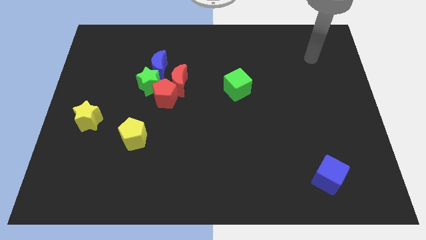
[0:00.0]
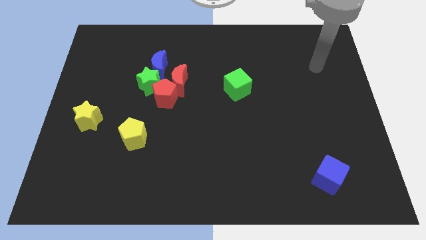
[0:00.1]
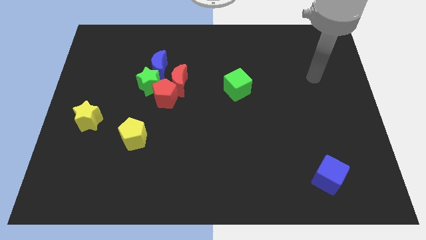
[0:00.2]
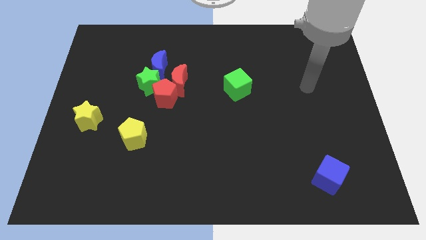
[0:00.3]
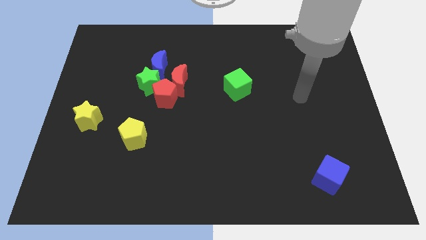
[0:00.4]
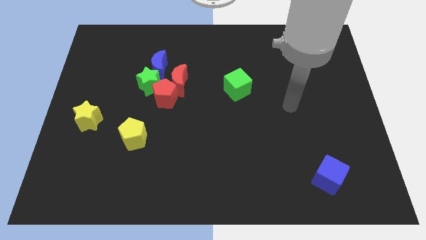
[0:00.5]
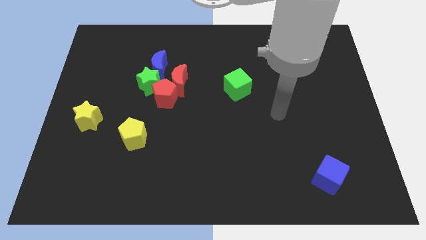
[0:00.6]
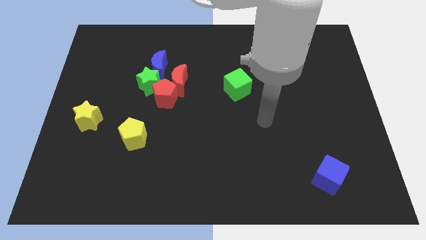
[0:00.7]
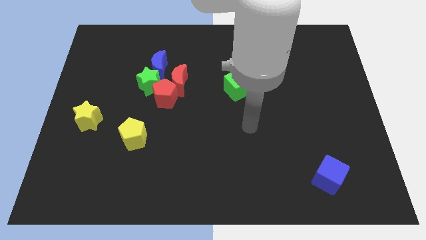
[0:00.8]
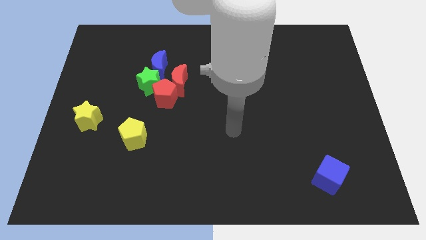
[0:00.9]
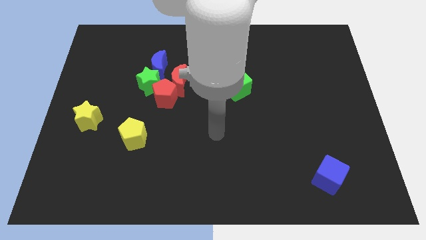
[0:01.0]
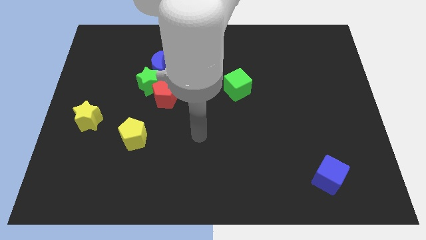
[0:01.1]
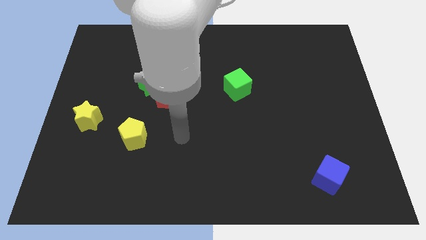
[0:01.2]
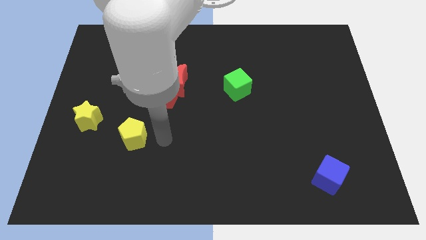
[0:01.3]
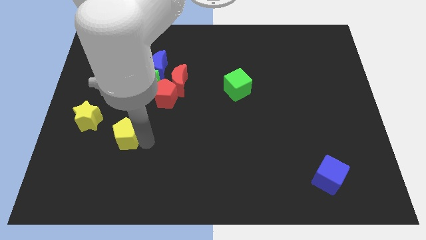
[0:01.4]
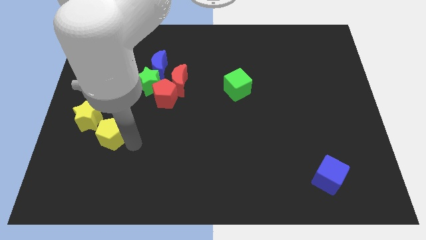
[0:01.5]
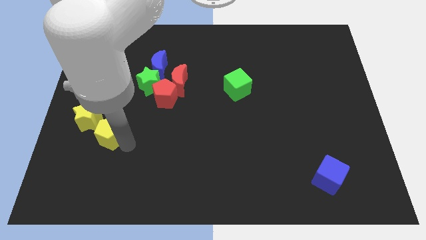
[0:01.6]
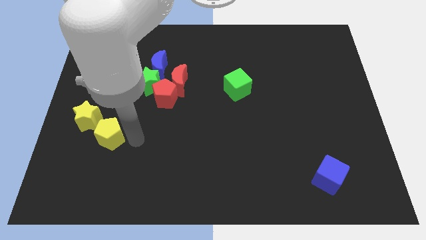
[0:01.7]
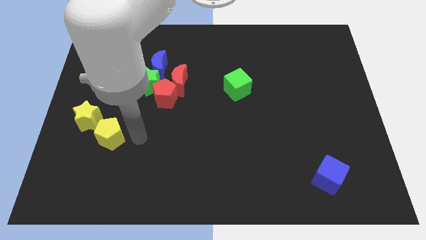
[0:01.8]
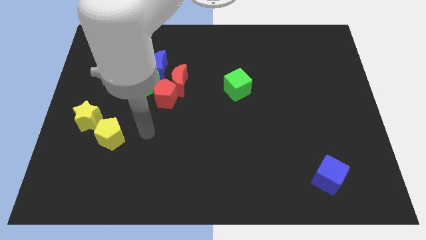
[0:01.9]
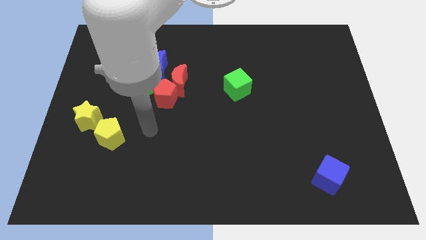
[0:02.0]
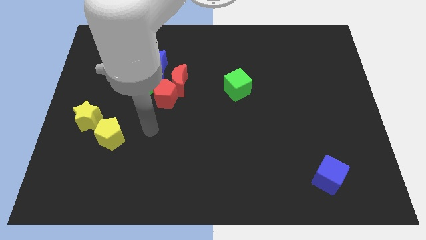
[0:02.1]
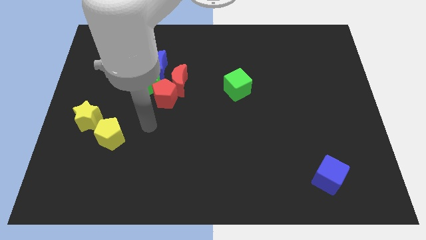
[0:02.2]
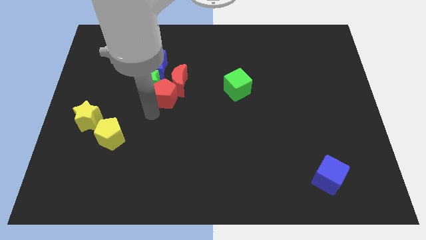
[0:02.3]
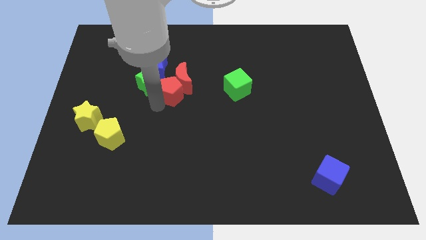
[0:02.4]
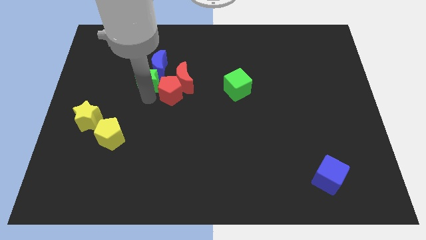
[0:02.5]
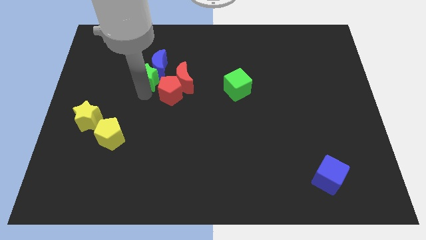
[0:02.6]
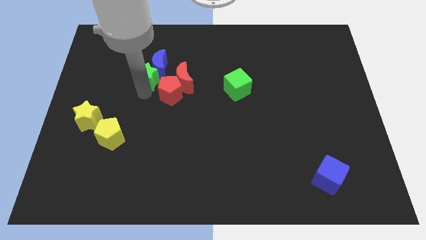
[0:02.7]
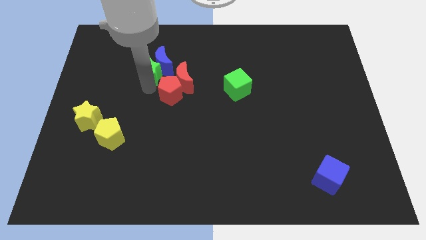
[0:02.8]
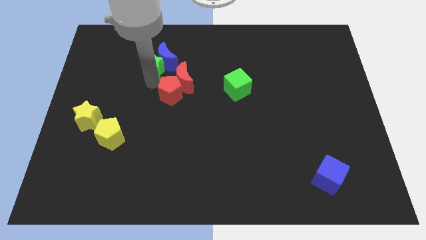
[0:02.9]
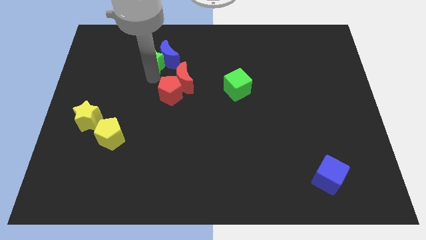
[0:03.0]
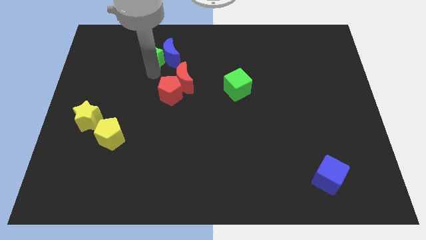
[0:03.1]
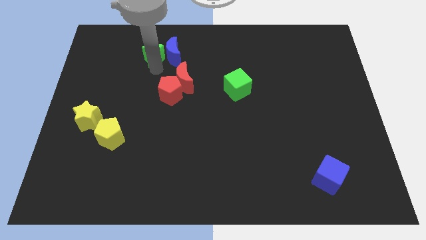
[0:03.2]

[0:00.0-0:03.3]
go and push the yellow pentagon and green star

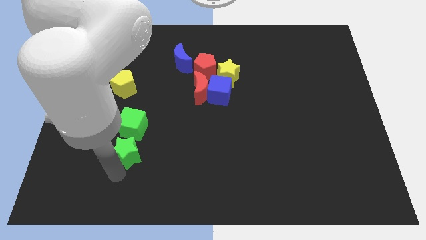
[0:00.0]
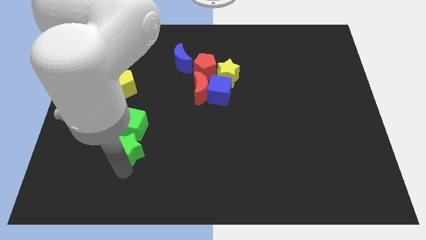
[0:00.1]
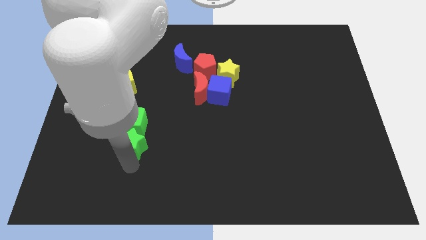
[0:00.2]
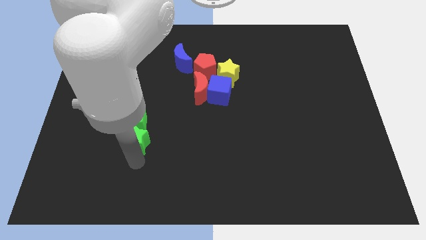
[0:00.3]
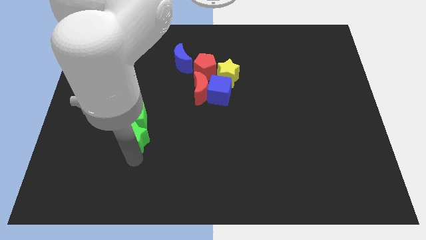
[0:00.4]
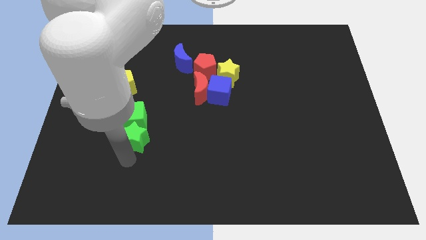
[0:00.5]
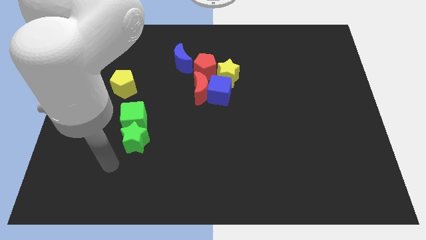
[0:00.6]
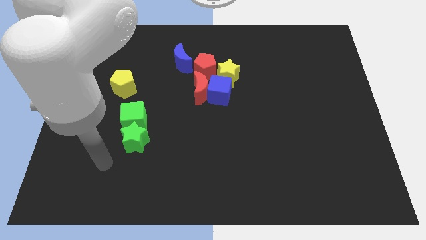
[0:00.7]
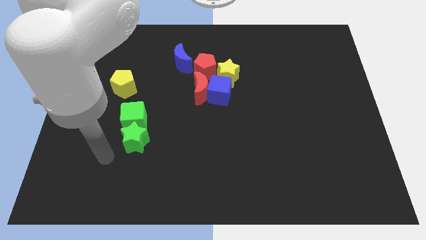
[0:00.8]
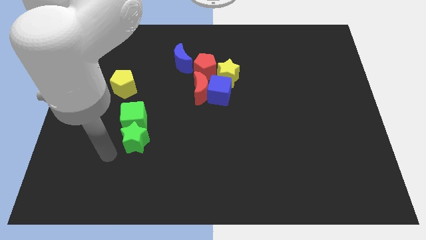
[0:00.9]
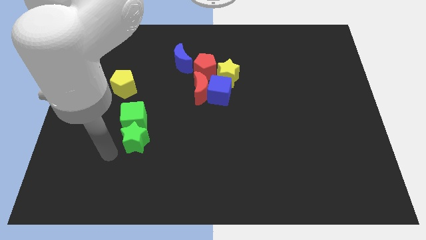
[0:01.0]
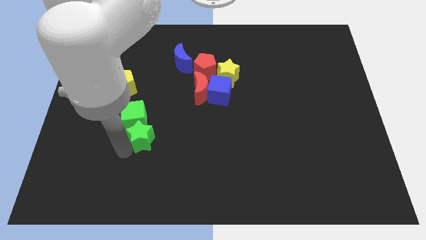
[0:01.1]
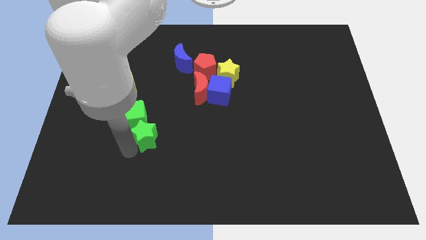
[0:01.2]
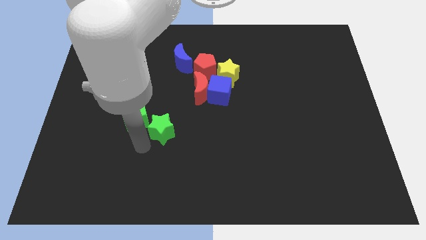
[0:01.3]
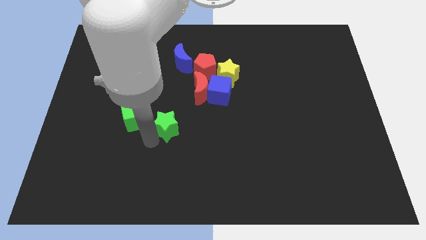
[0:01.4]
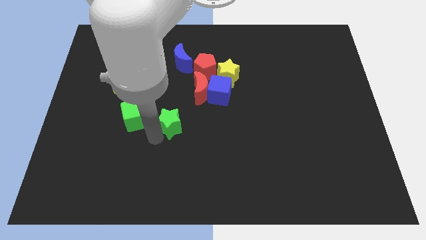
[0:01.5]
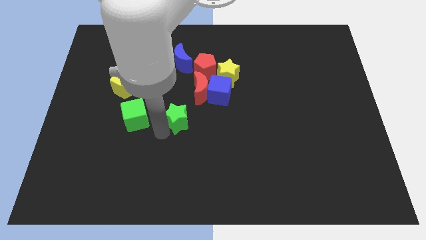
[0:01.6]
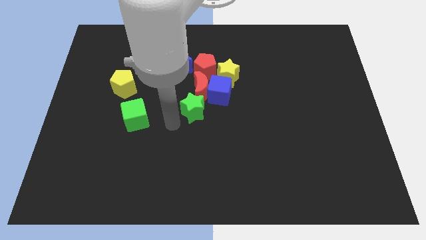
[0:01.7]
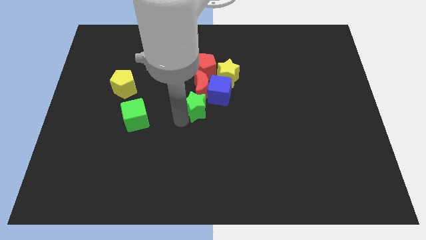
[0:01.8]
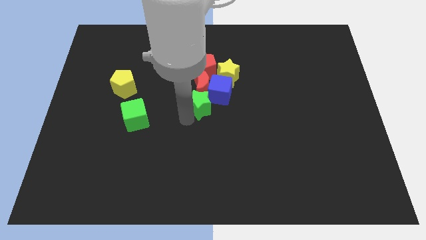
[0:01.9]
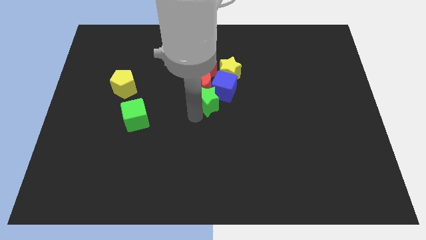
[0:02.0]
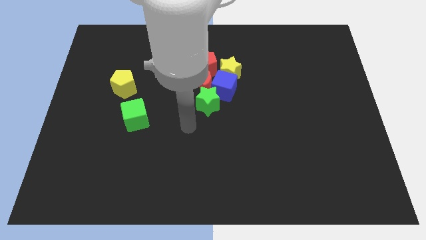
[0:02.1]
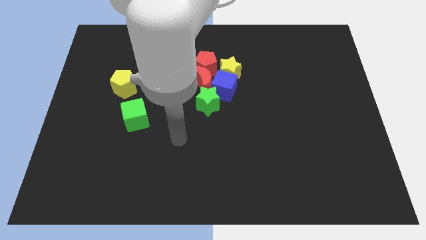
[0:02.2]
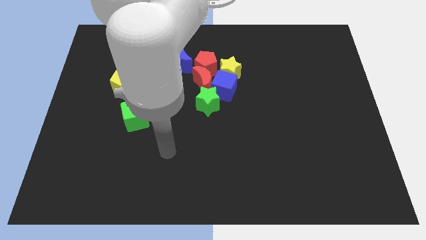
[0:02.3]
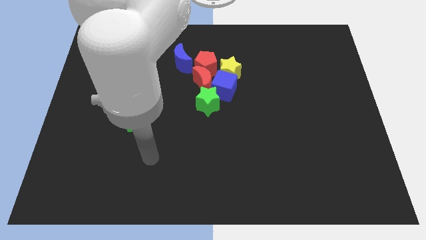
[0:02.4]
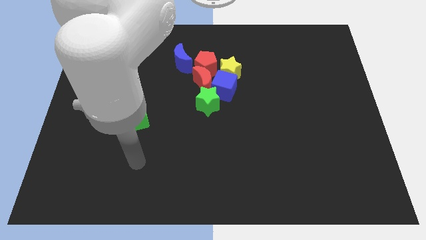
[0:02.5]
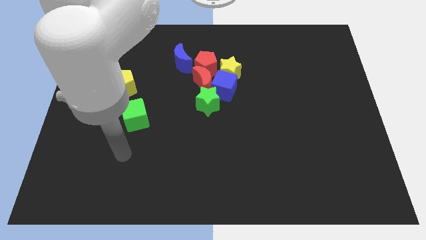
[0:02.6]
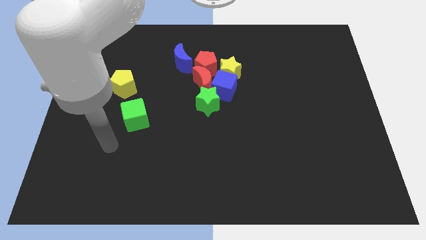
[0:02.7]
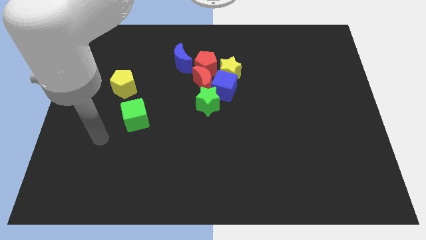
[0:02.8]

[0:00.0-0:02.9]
separate the green blocks

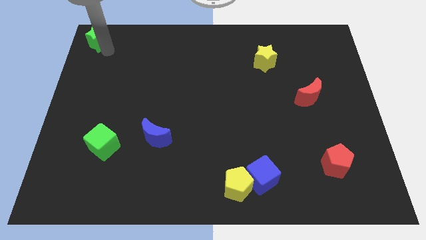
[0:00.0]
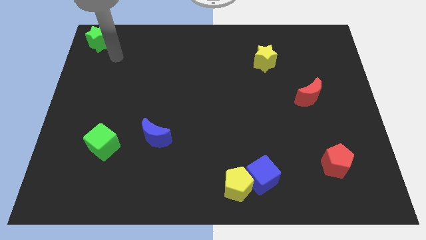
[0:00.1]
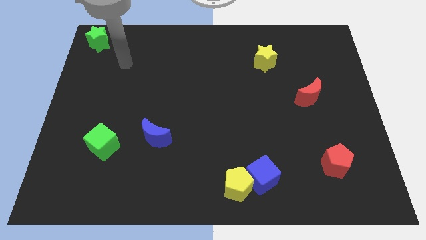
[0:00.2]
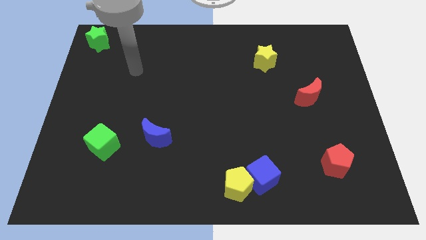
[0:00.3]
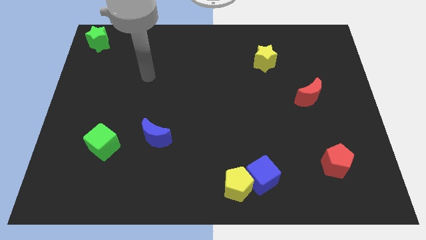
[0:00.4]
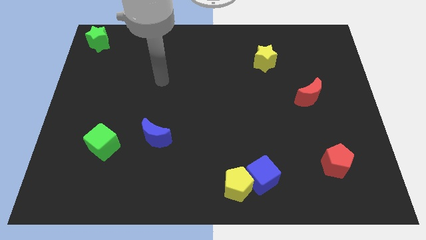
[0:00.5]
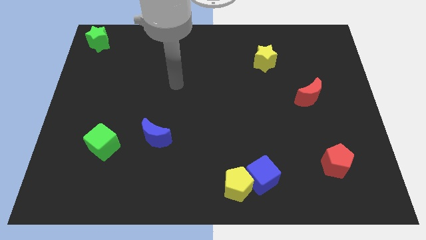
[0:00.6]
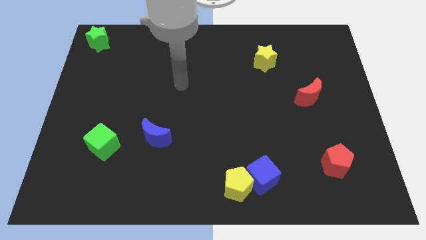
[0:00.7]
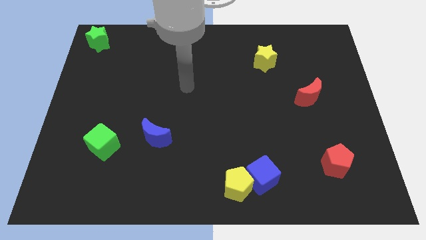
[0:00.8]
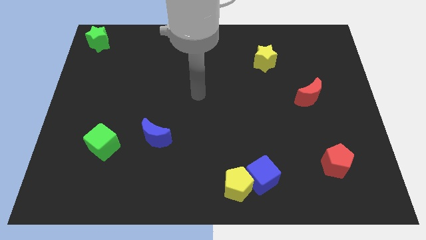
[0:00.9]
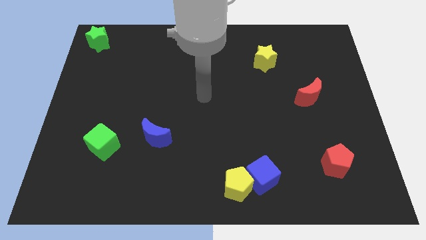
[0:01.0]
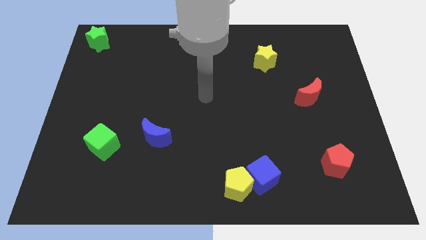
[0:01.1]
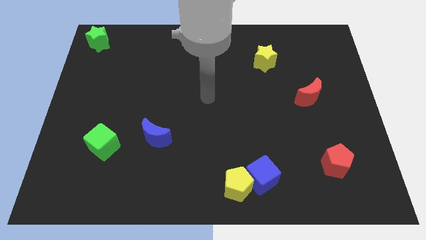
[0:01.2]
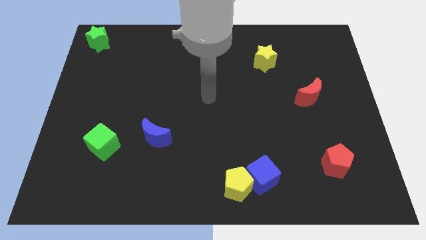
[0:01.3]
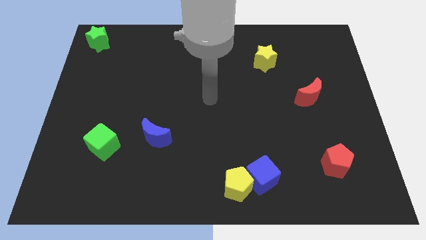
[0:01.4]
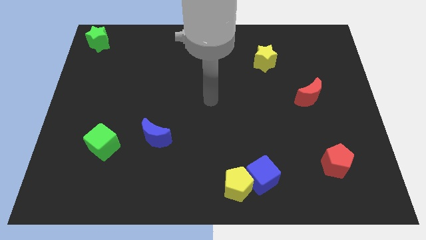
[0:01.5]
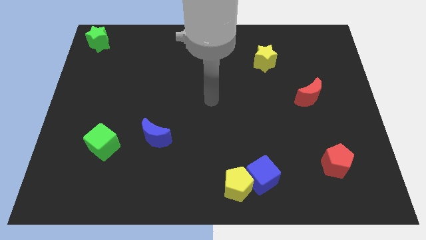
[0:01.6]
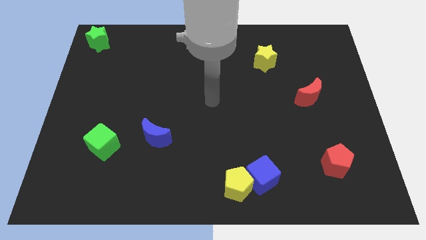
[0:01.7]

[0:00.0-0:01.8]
move your hand away from the green star

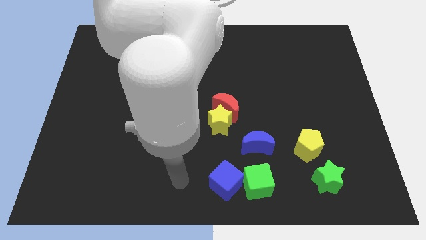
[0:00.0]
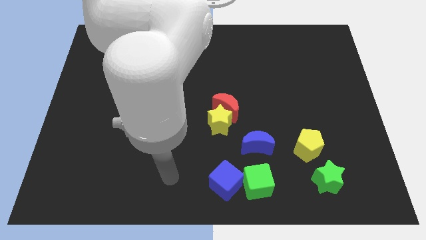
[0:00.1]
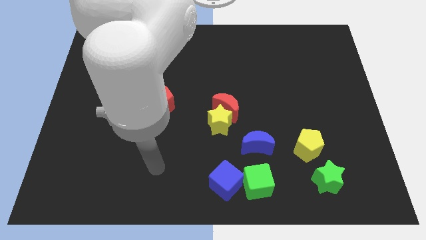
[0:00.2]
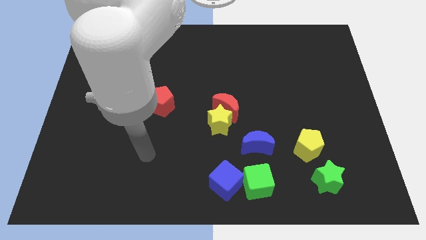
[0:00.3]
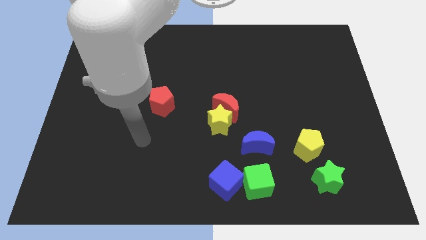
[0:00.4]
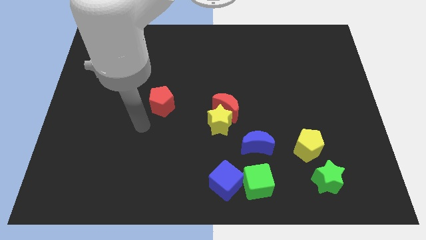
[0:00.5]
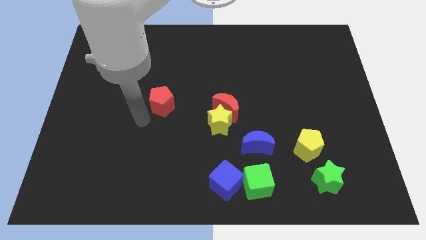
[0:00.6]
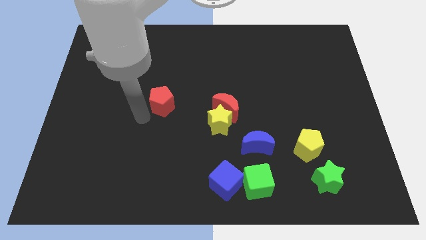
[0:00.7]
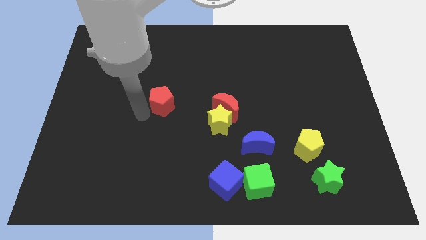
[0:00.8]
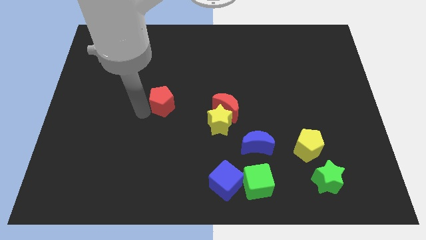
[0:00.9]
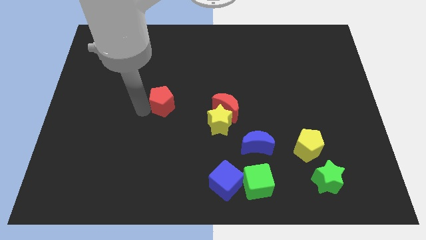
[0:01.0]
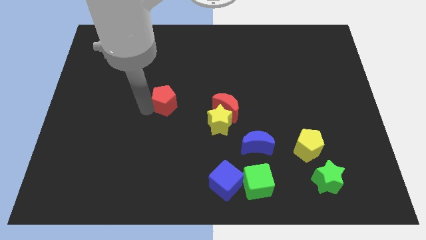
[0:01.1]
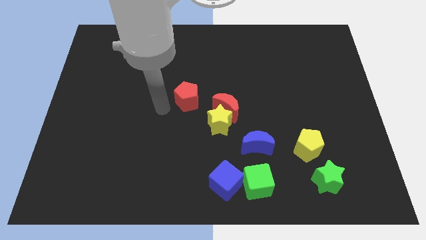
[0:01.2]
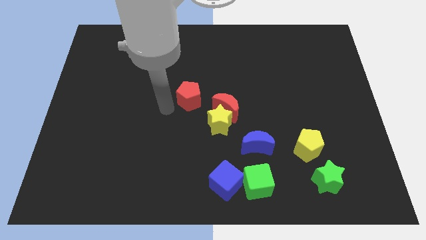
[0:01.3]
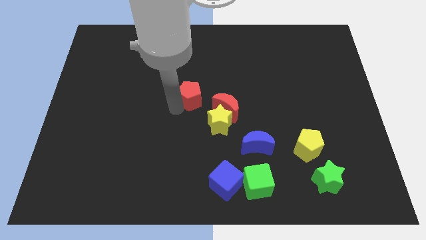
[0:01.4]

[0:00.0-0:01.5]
move the arm towards the red pentagon
